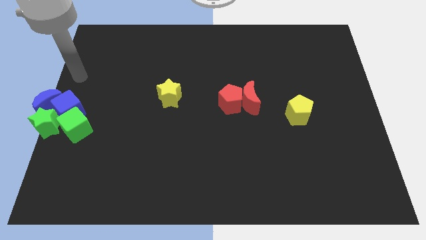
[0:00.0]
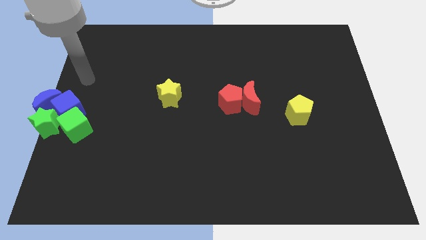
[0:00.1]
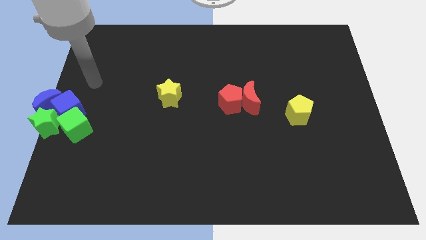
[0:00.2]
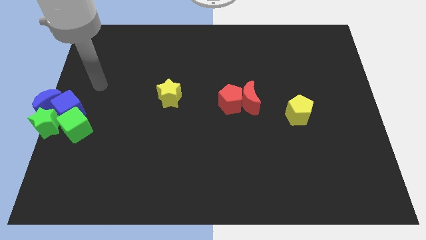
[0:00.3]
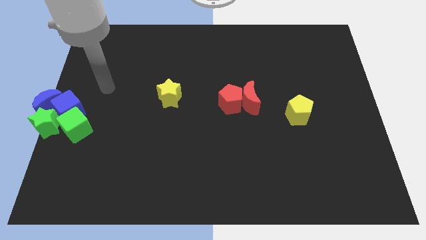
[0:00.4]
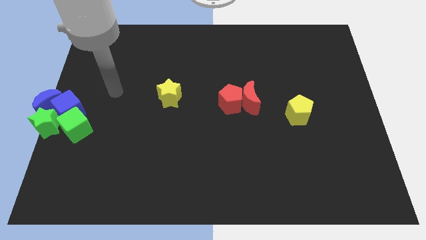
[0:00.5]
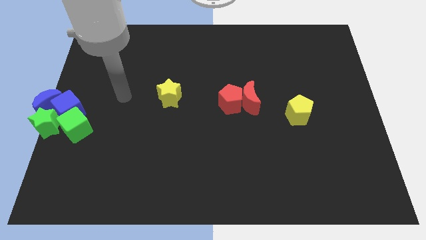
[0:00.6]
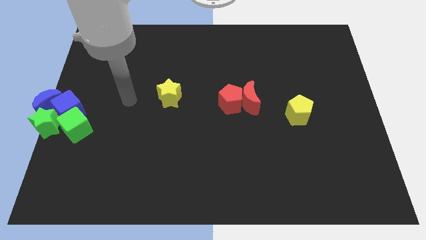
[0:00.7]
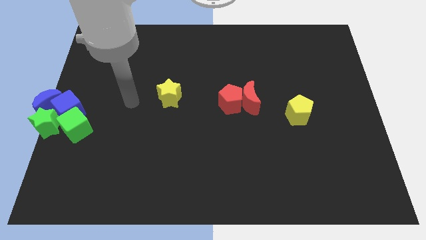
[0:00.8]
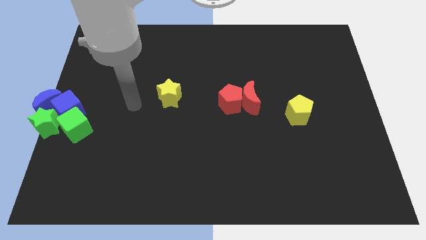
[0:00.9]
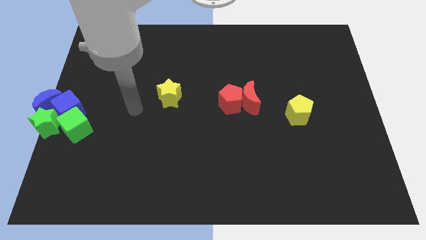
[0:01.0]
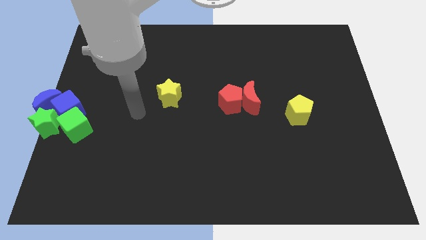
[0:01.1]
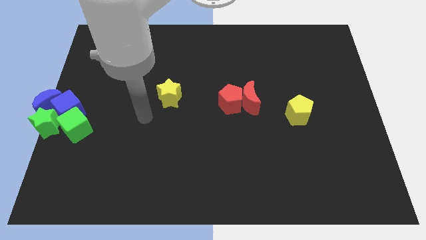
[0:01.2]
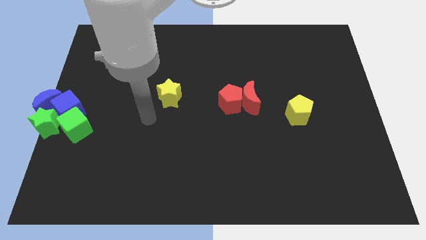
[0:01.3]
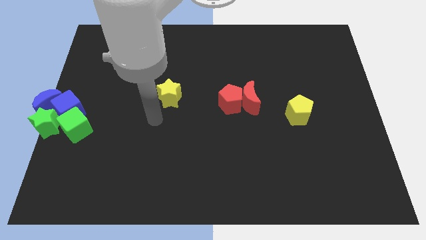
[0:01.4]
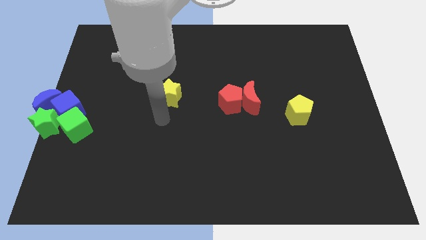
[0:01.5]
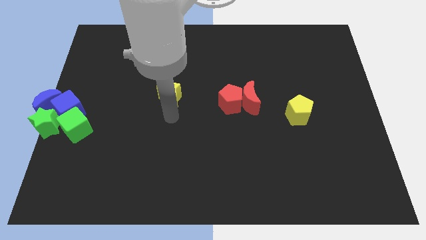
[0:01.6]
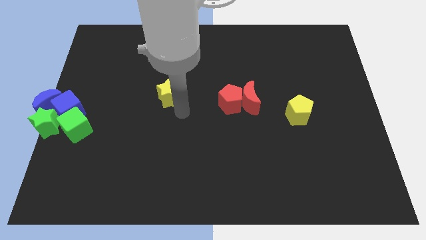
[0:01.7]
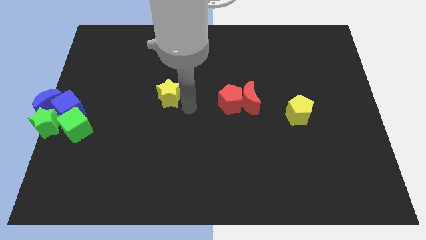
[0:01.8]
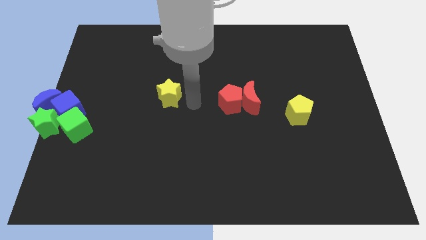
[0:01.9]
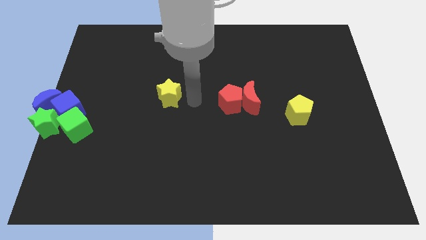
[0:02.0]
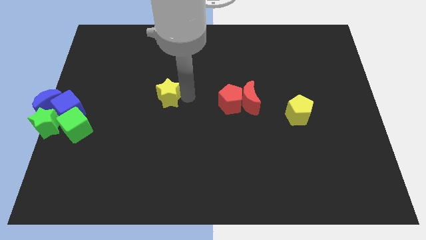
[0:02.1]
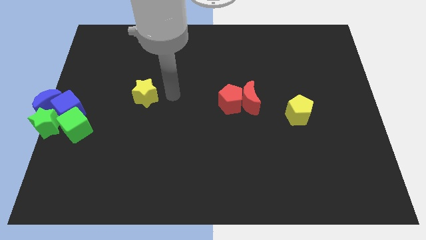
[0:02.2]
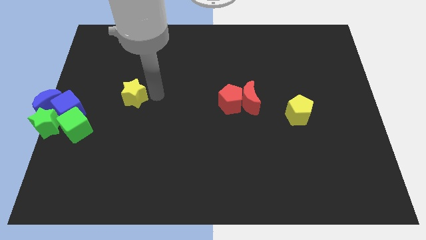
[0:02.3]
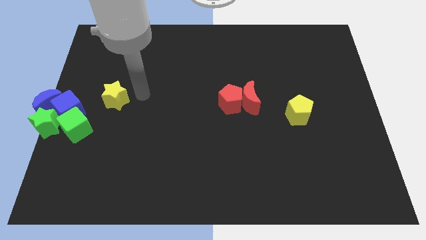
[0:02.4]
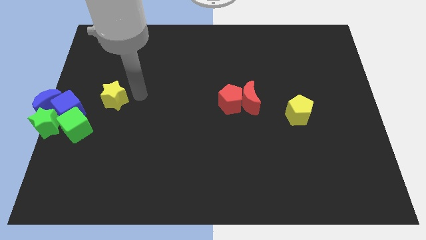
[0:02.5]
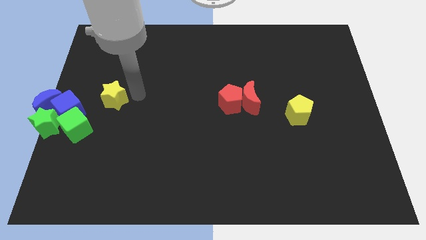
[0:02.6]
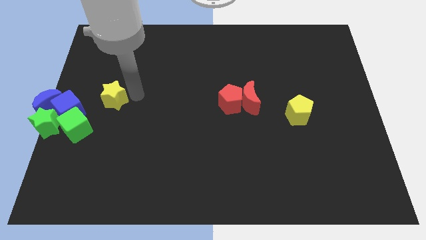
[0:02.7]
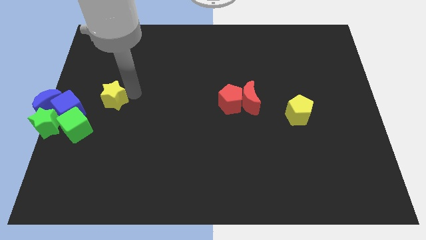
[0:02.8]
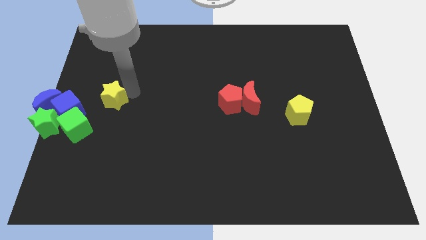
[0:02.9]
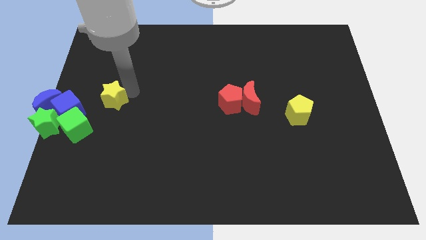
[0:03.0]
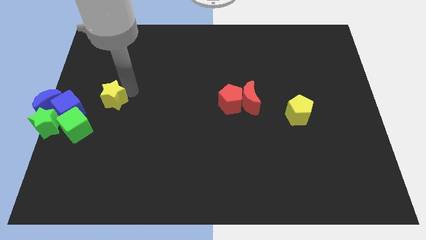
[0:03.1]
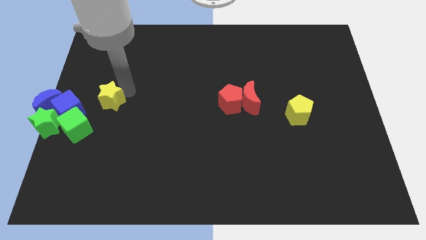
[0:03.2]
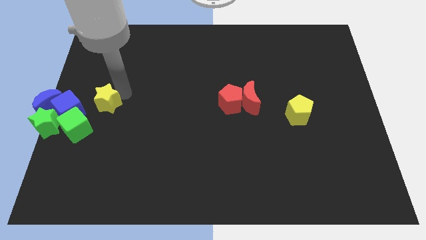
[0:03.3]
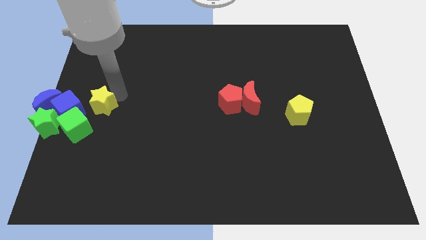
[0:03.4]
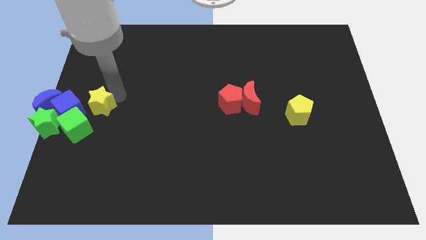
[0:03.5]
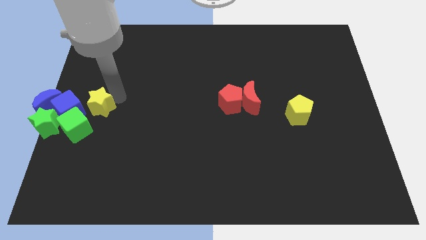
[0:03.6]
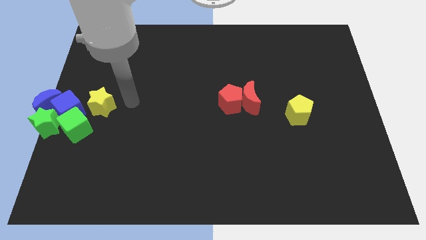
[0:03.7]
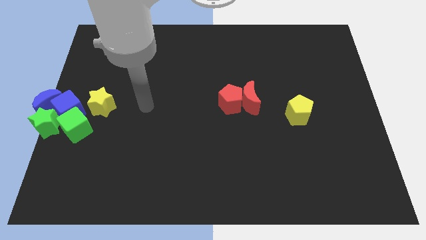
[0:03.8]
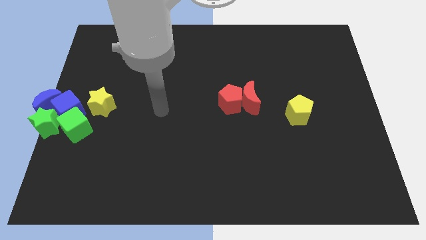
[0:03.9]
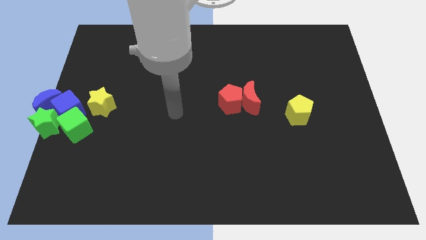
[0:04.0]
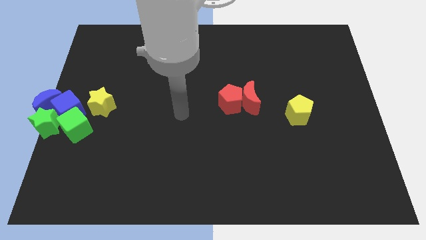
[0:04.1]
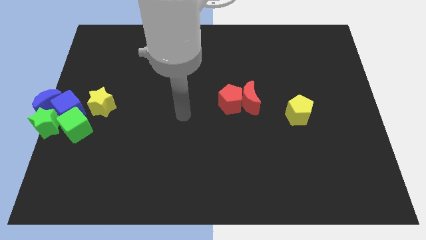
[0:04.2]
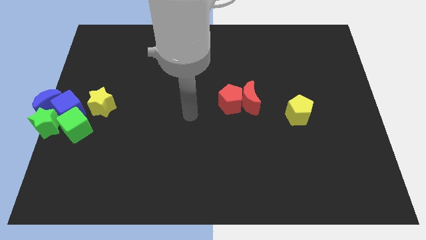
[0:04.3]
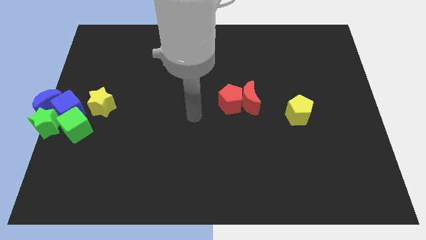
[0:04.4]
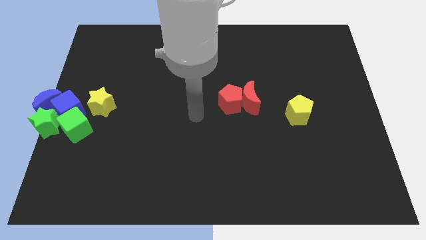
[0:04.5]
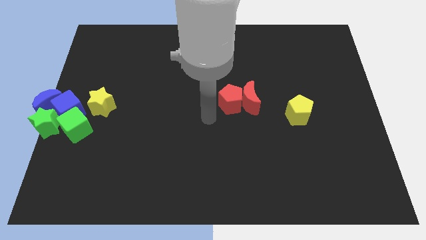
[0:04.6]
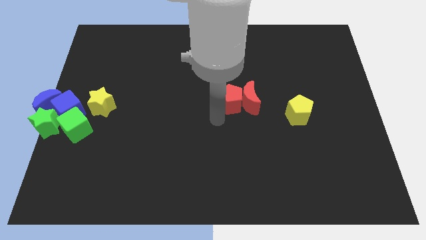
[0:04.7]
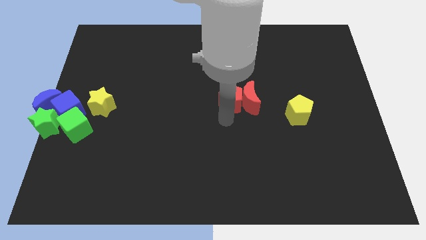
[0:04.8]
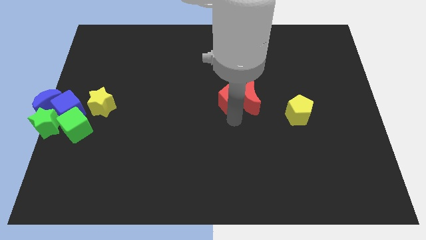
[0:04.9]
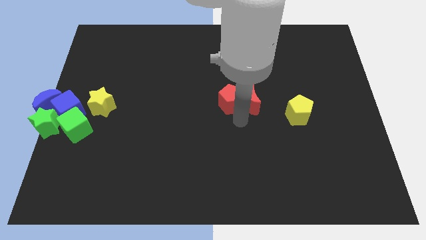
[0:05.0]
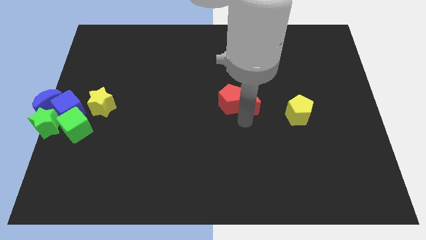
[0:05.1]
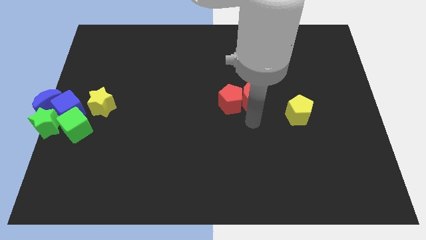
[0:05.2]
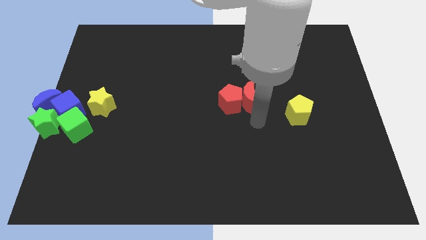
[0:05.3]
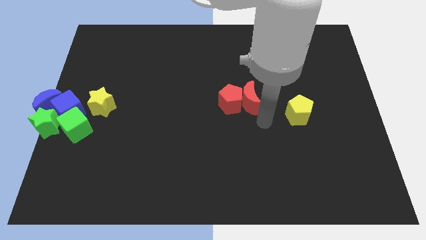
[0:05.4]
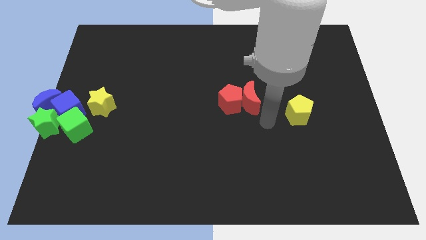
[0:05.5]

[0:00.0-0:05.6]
push the yellow star towards the blue cube

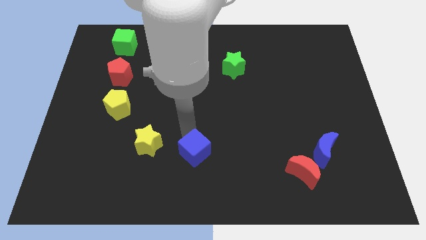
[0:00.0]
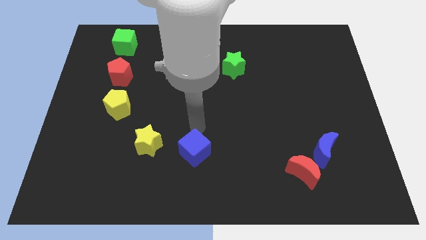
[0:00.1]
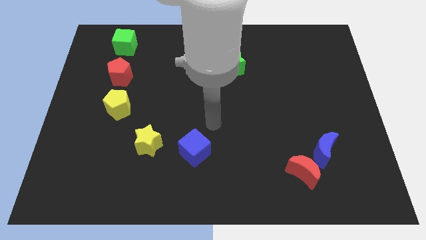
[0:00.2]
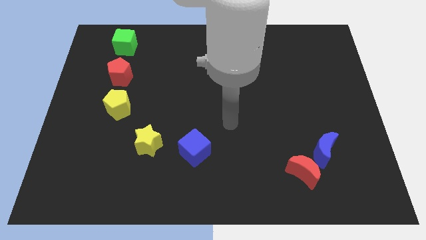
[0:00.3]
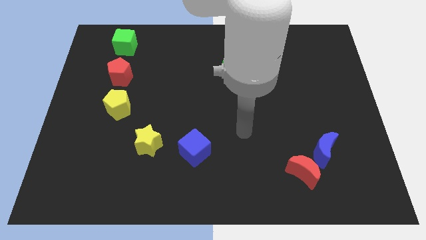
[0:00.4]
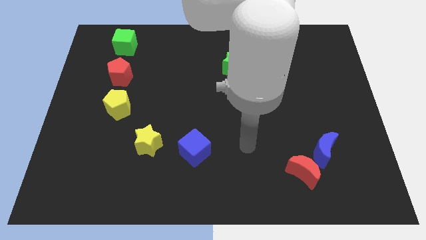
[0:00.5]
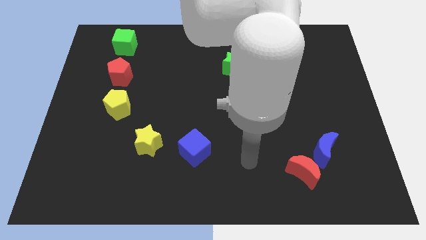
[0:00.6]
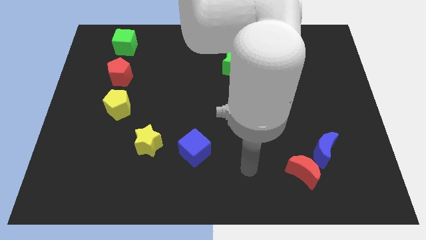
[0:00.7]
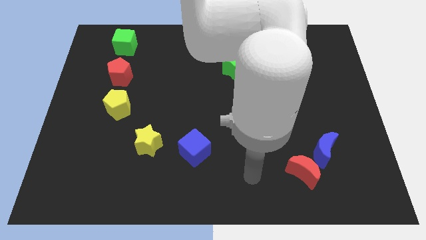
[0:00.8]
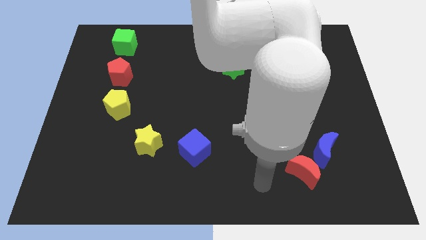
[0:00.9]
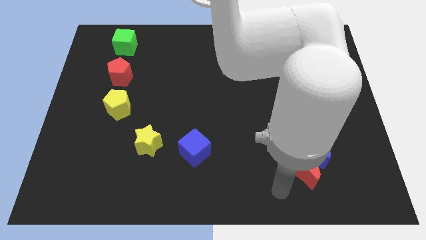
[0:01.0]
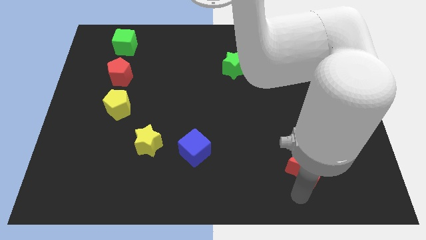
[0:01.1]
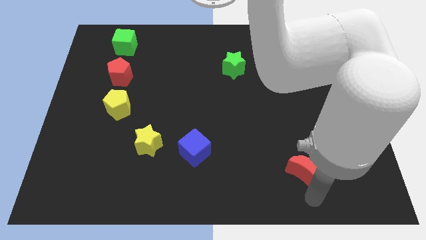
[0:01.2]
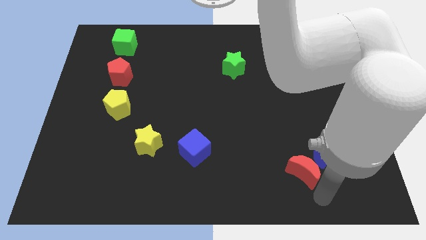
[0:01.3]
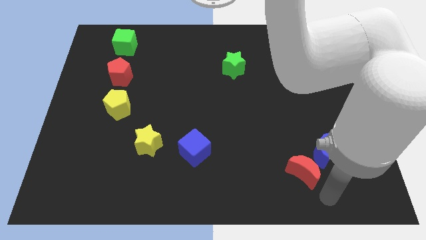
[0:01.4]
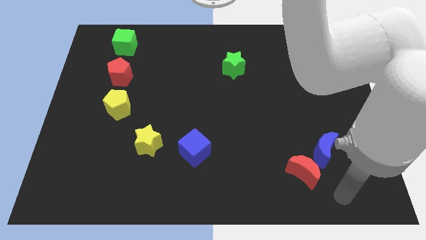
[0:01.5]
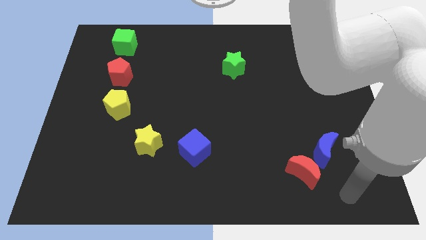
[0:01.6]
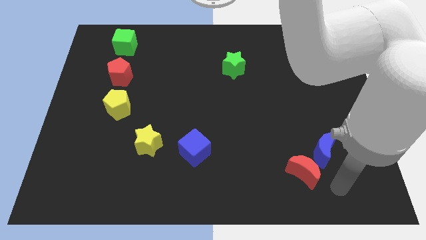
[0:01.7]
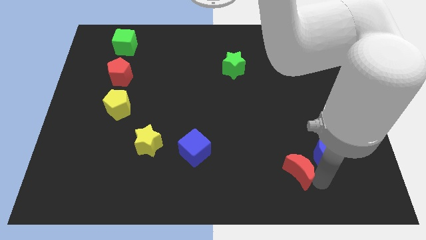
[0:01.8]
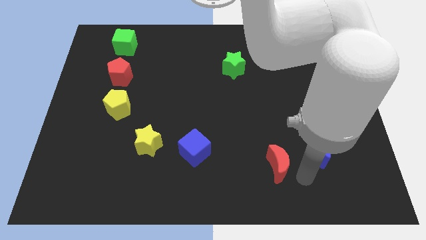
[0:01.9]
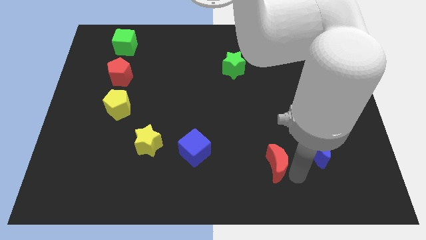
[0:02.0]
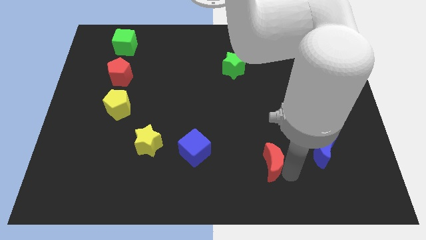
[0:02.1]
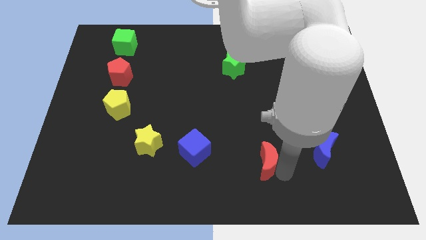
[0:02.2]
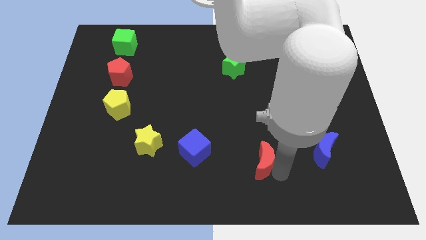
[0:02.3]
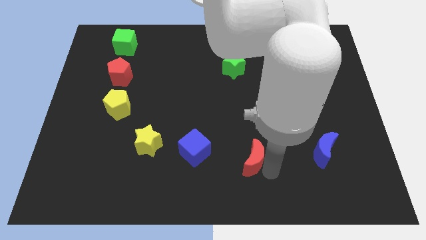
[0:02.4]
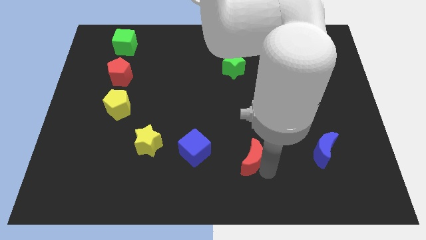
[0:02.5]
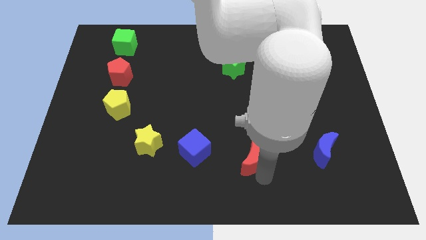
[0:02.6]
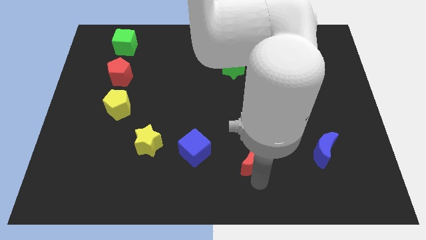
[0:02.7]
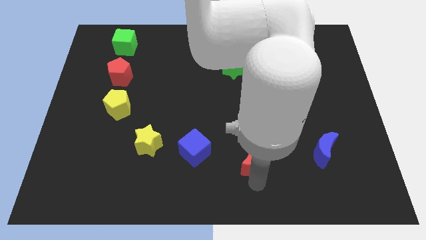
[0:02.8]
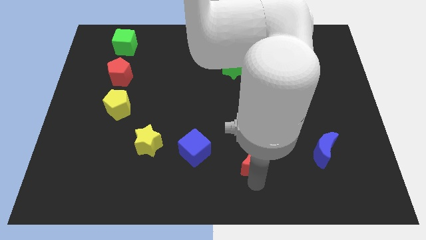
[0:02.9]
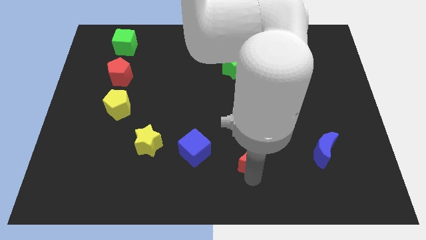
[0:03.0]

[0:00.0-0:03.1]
place red moon in between blue moon and blue cube

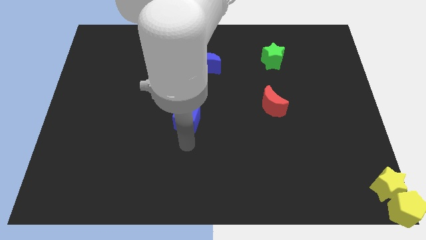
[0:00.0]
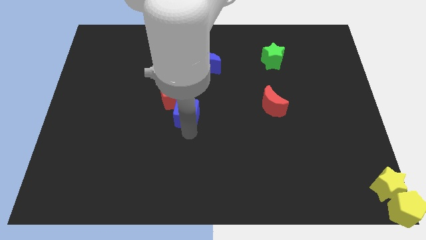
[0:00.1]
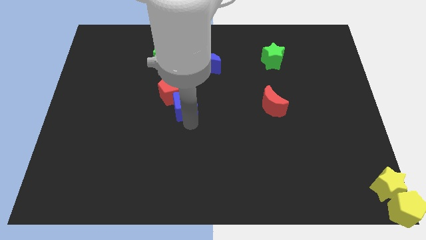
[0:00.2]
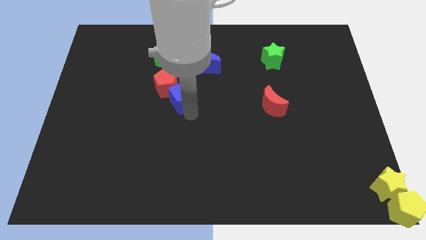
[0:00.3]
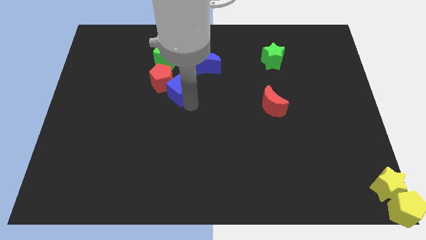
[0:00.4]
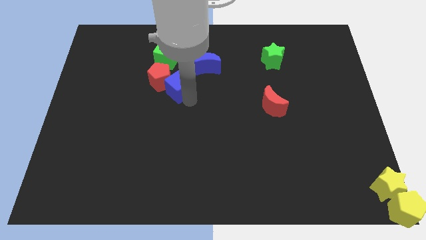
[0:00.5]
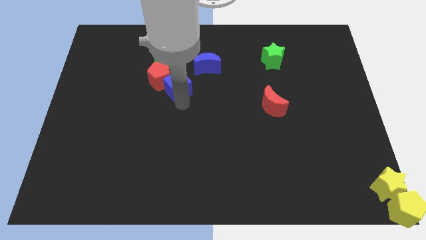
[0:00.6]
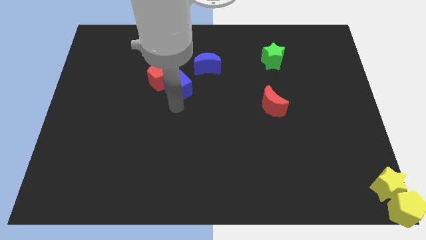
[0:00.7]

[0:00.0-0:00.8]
push the red pentagon with the help of blue cube towards the green cube
